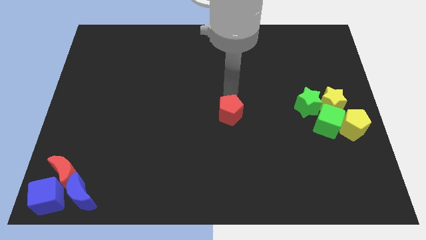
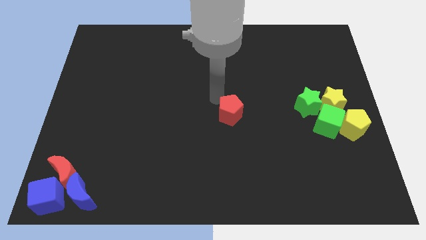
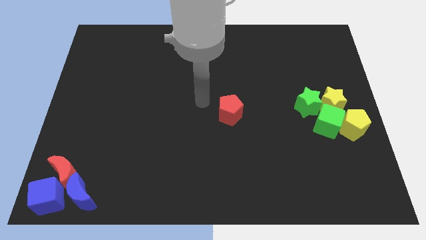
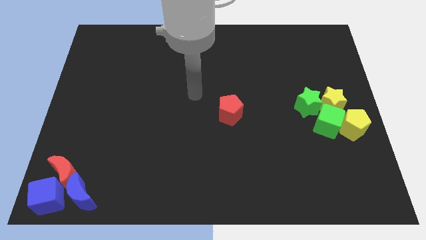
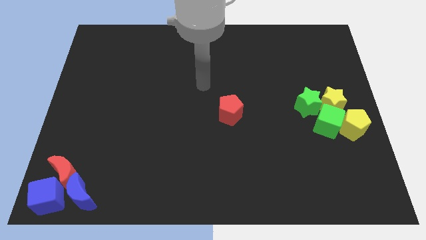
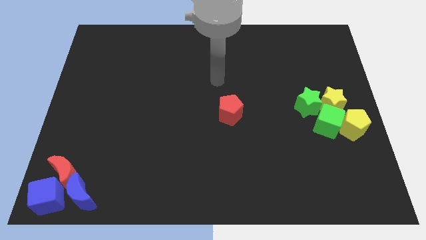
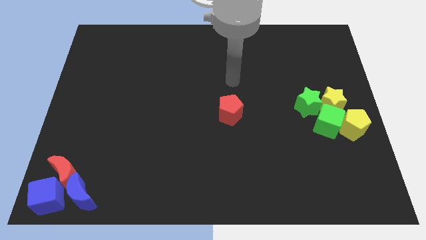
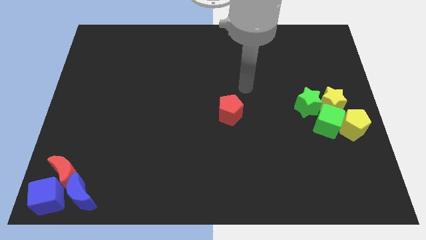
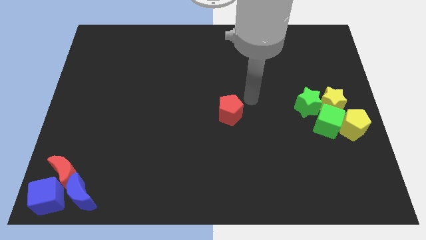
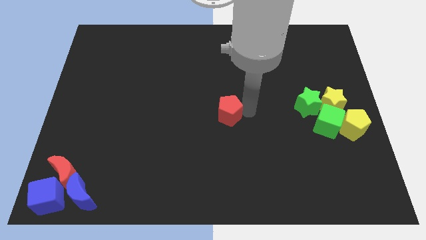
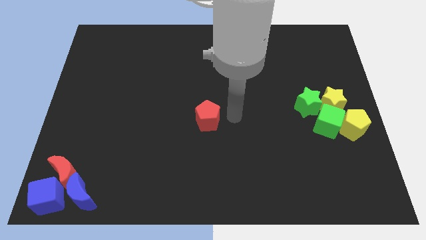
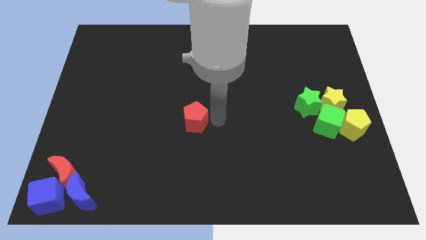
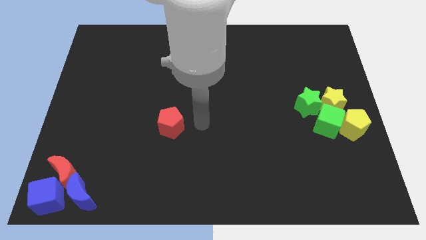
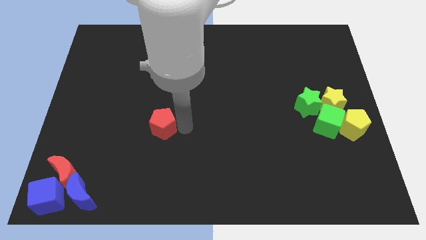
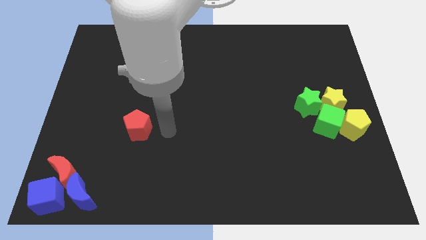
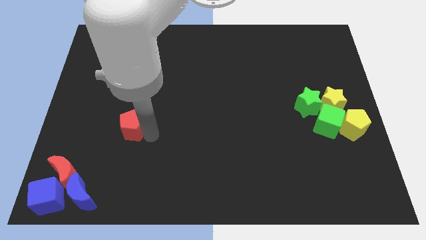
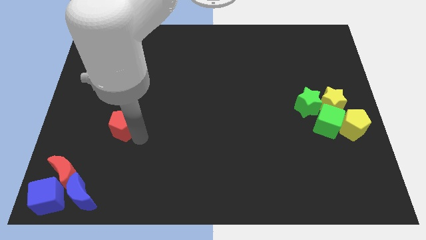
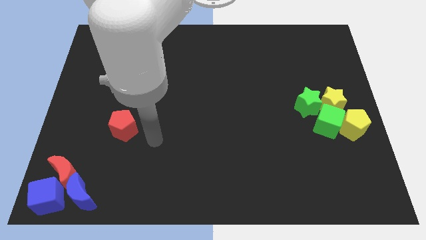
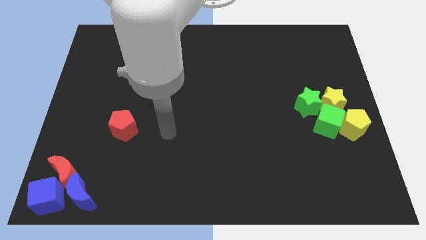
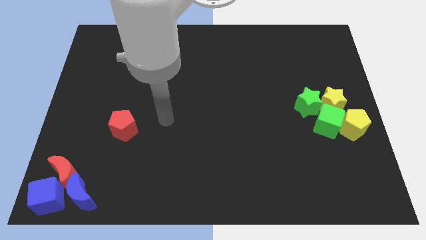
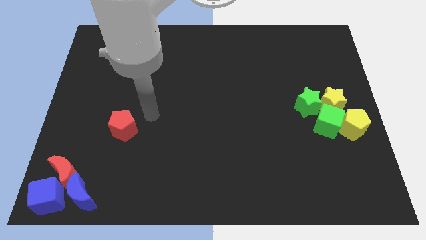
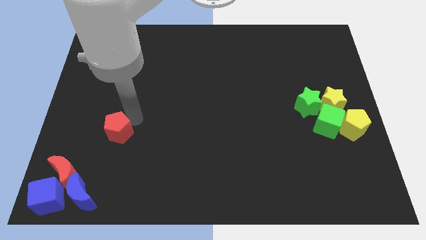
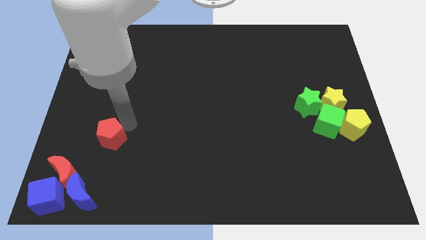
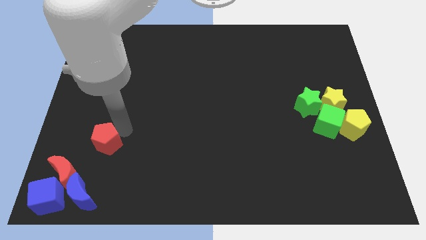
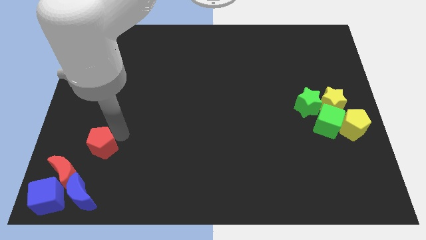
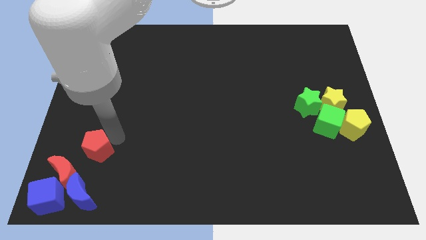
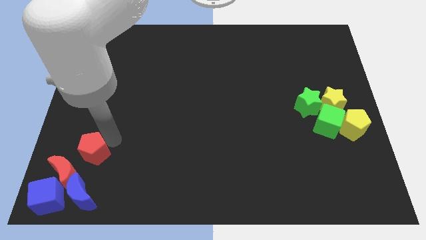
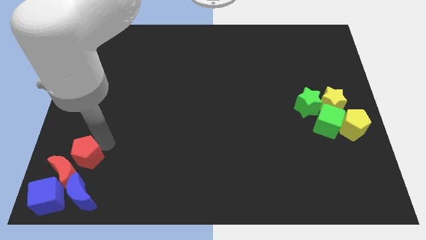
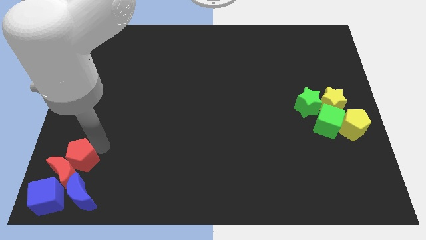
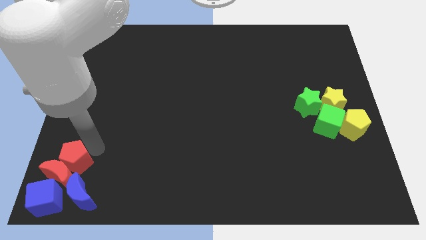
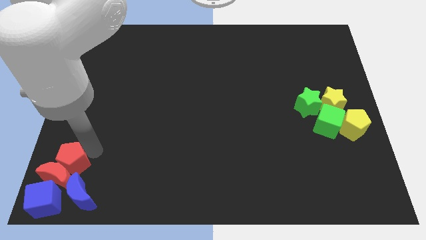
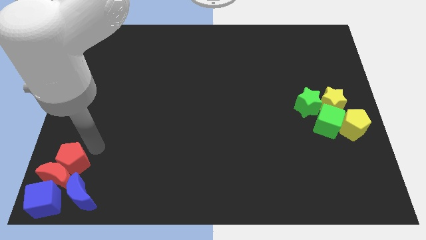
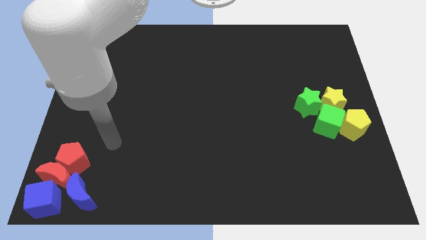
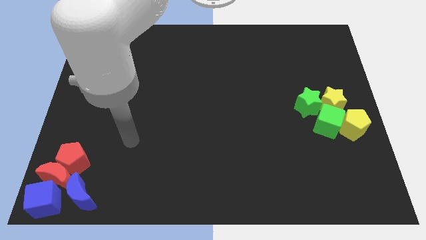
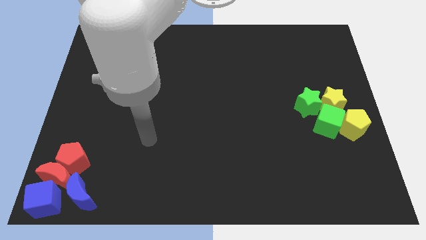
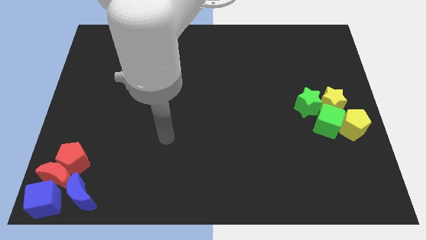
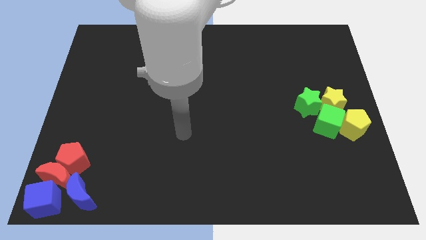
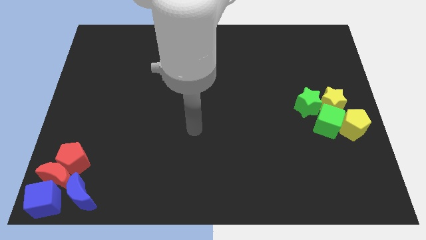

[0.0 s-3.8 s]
push the red pentagon close to the group of blocks

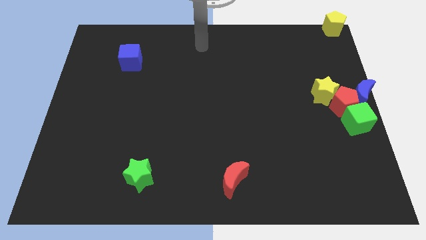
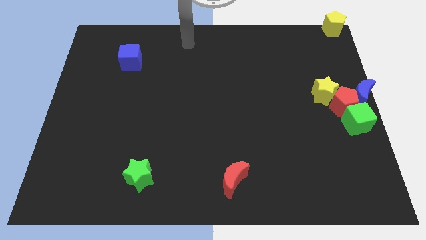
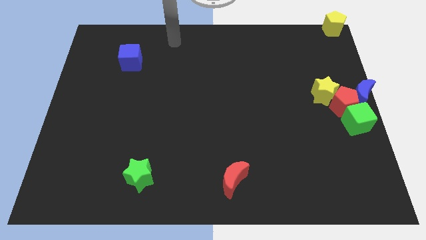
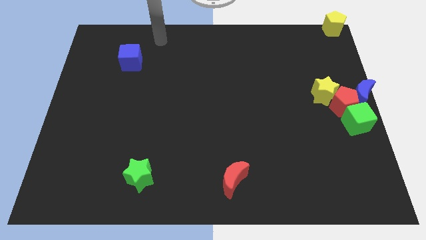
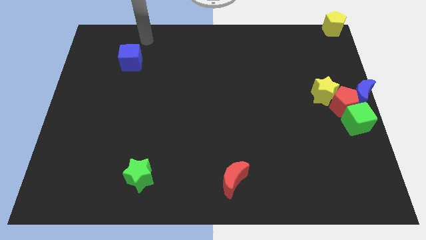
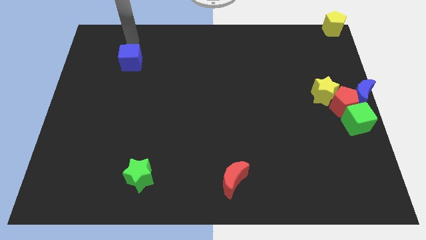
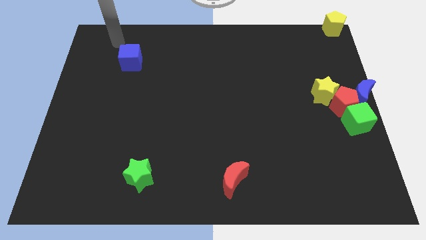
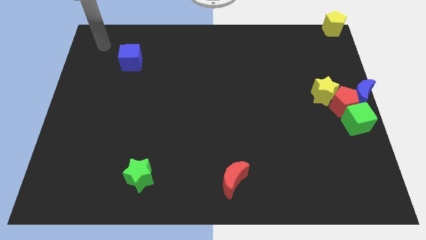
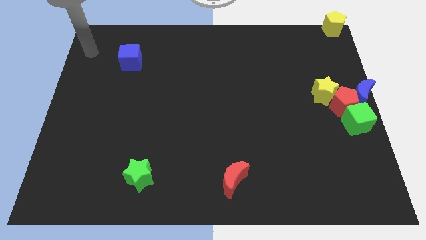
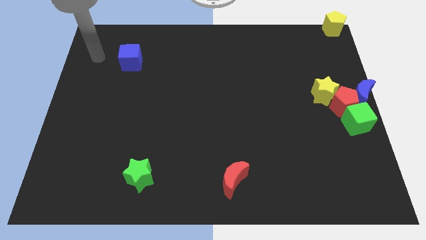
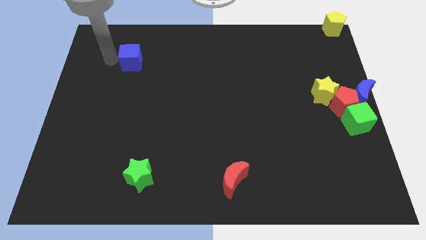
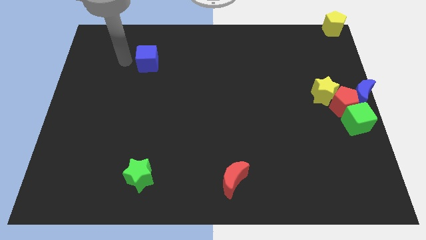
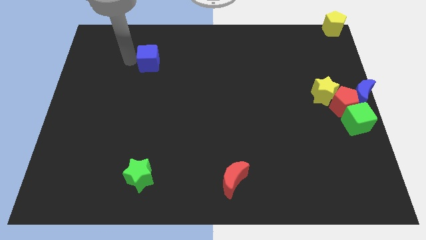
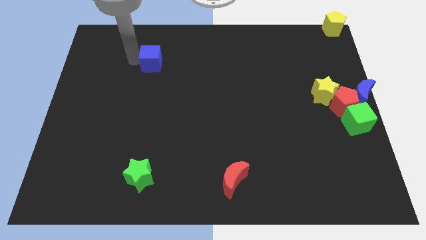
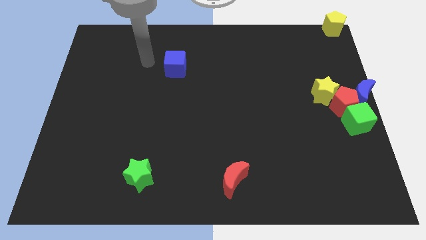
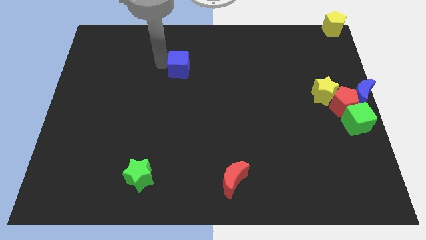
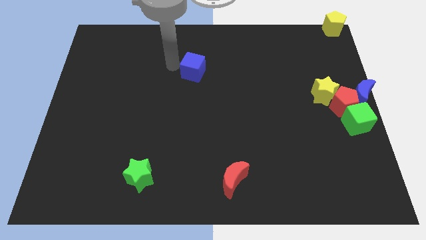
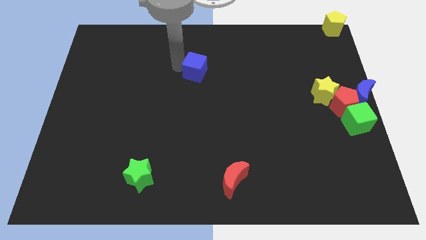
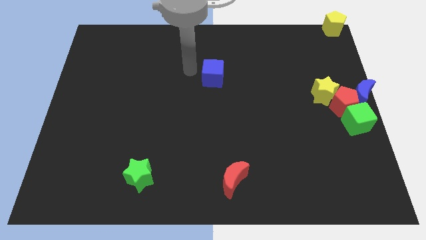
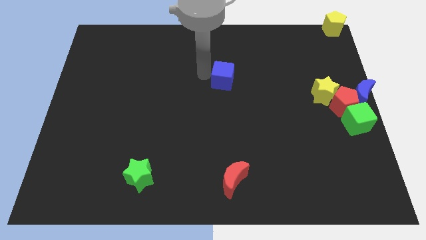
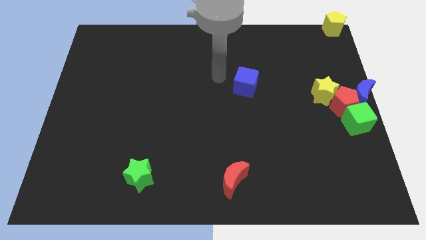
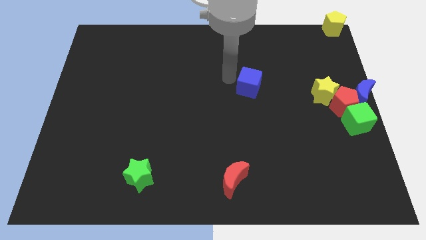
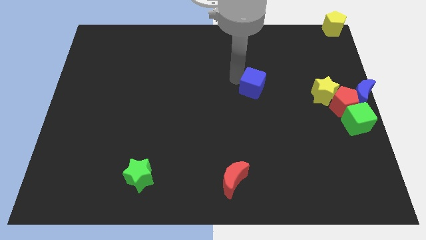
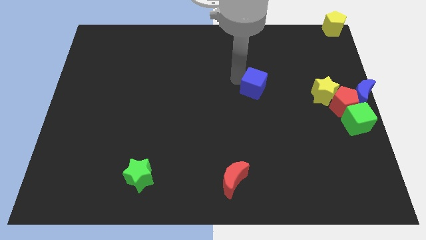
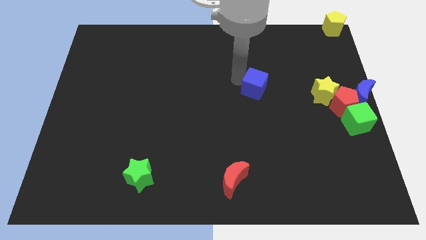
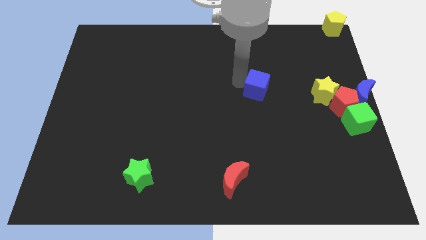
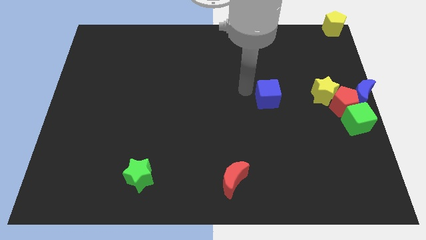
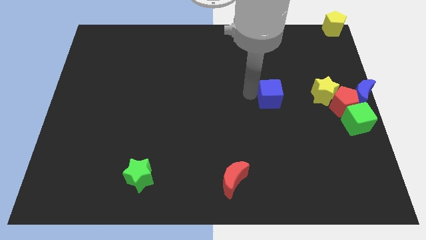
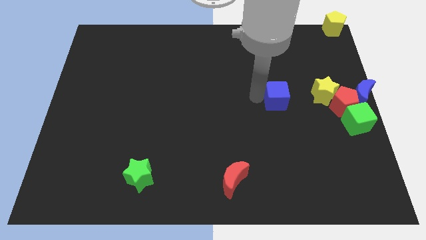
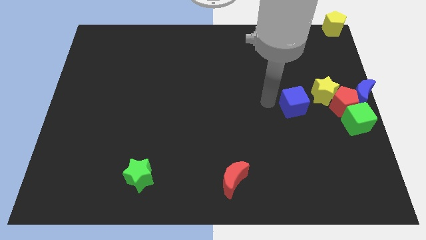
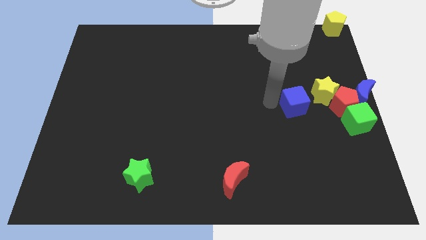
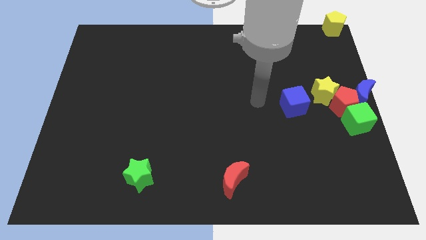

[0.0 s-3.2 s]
move the blue cube to the bottom of the yellow star

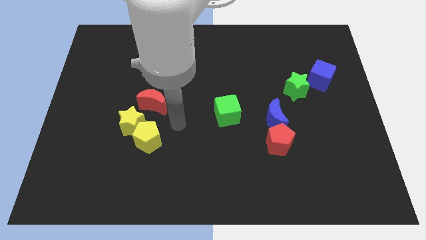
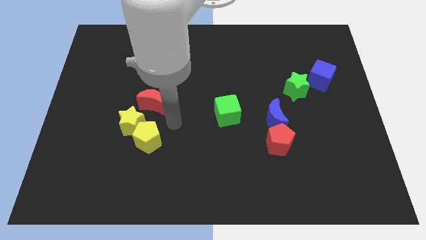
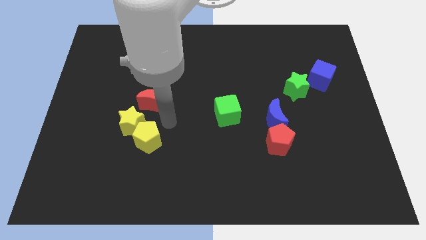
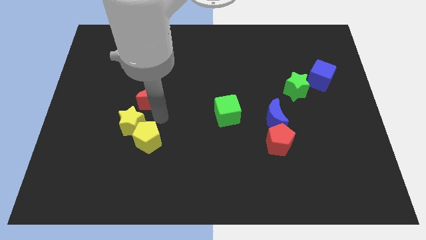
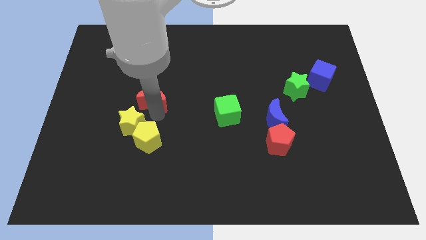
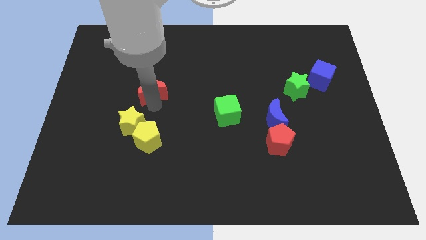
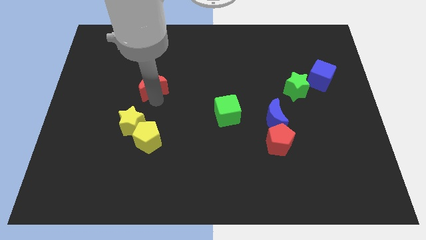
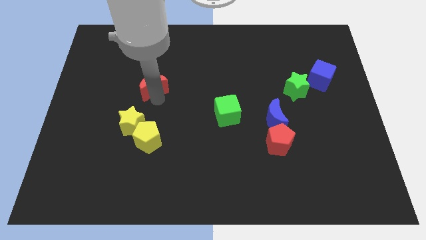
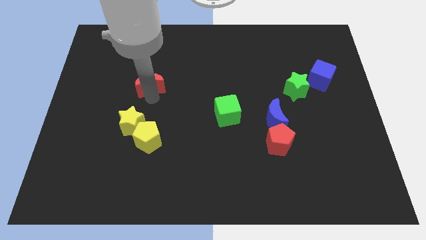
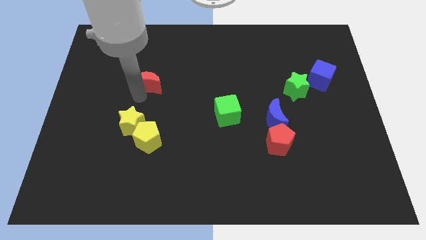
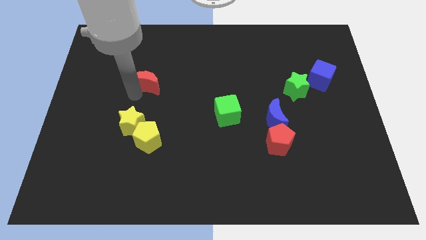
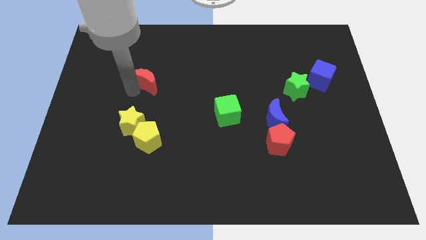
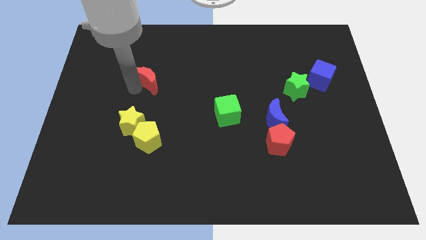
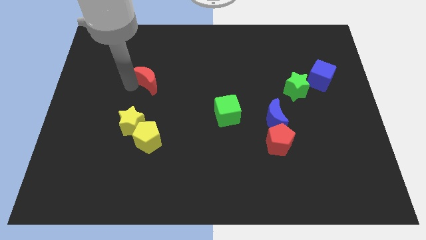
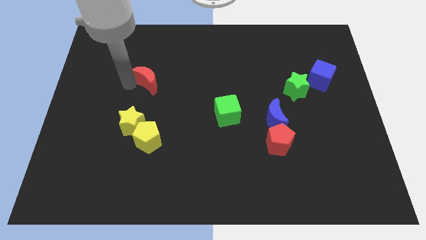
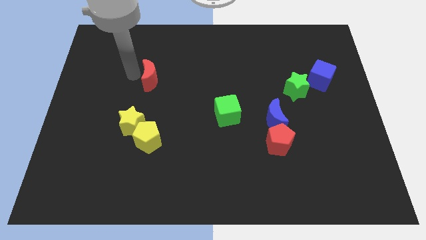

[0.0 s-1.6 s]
move the red pentagon upwards

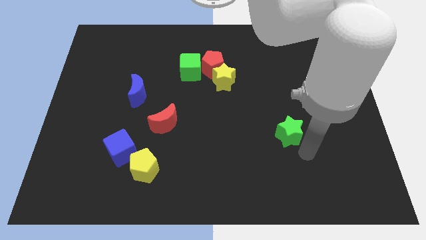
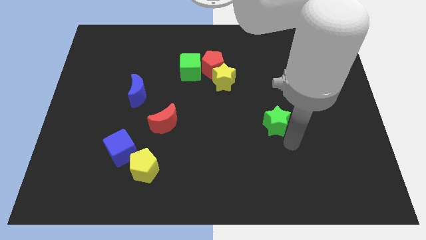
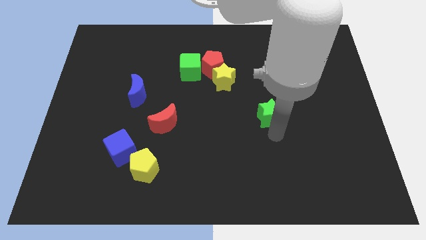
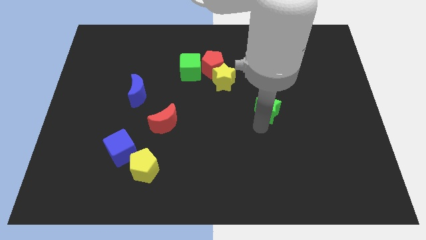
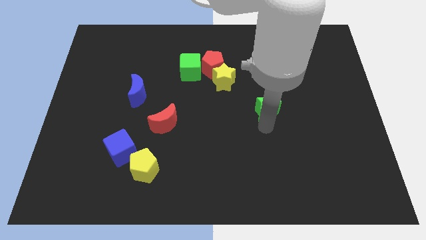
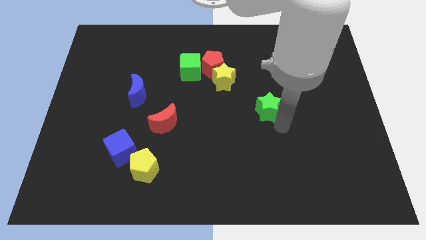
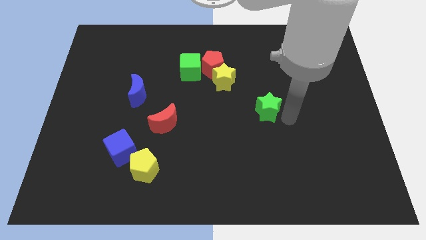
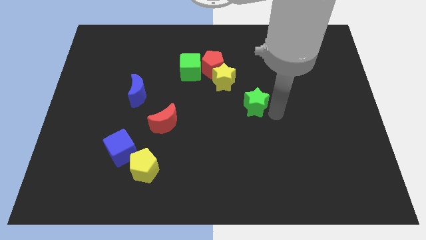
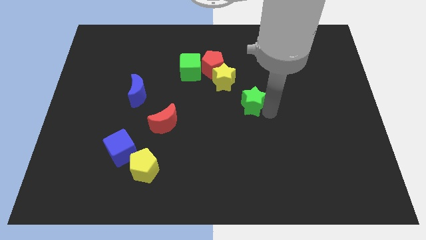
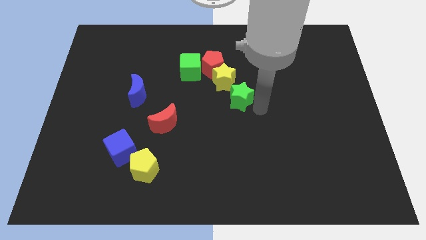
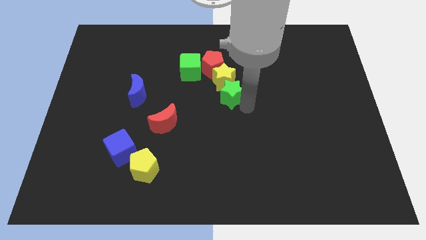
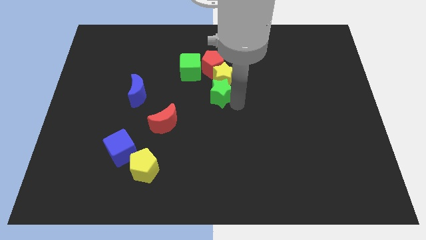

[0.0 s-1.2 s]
push the green star into the yellow star
